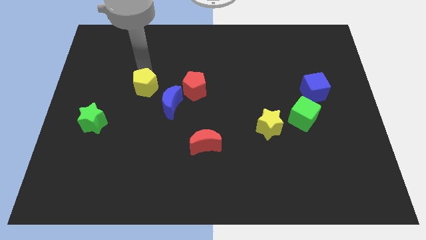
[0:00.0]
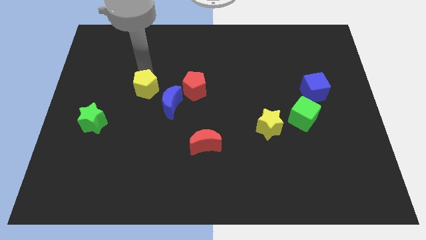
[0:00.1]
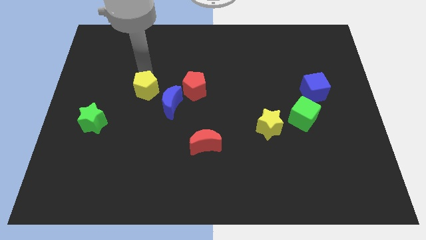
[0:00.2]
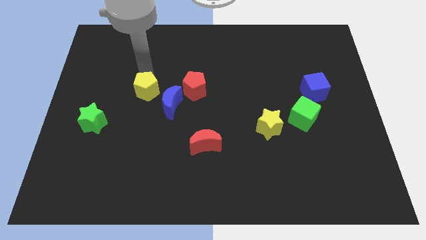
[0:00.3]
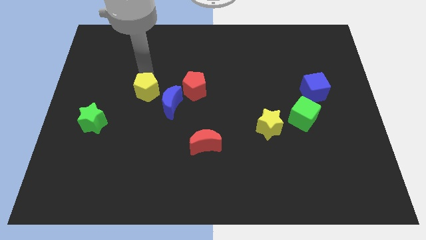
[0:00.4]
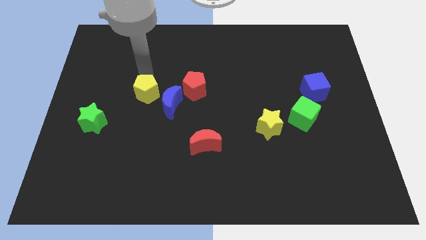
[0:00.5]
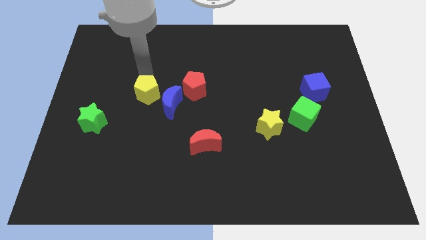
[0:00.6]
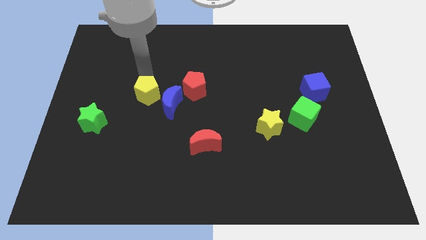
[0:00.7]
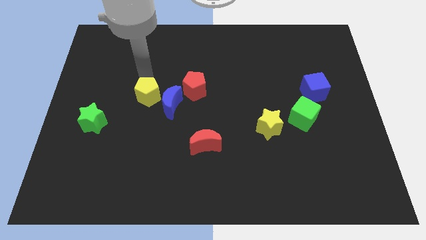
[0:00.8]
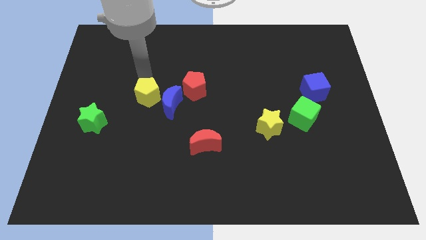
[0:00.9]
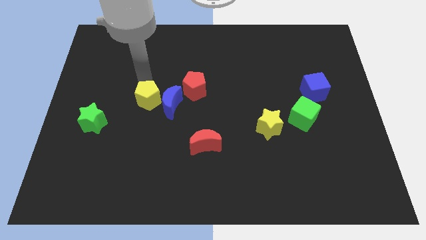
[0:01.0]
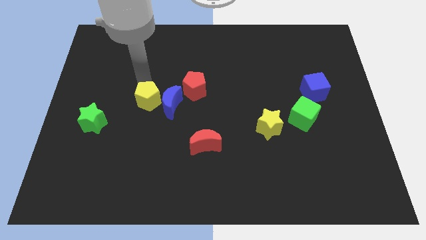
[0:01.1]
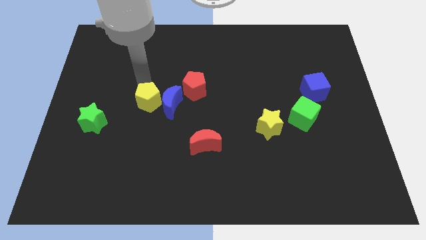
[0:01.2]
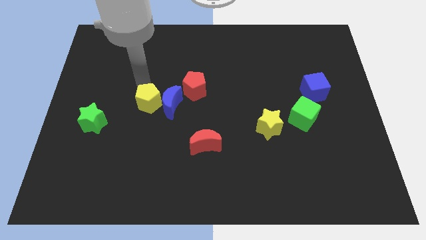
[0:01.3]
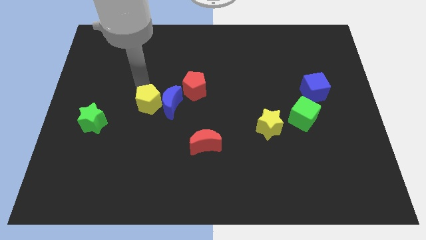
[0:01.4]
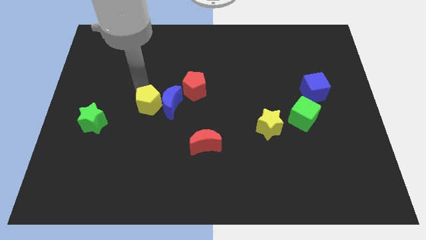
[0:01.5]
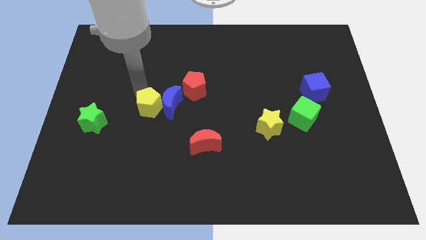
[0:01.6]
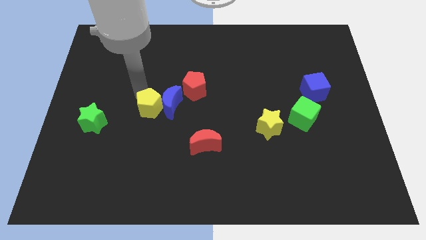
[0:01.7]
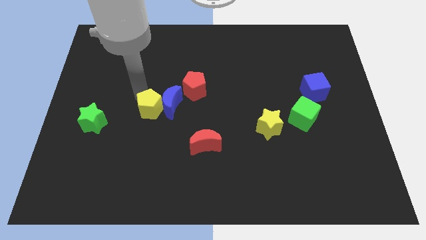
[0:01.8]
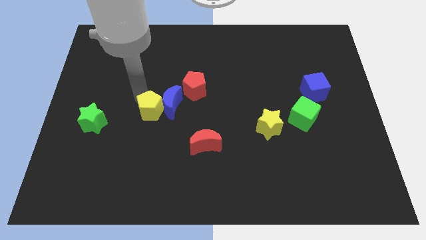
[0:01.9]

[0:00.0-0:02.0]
move the yellow pentagon into the blue crescent

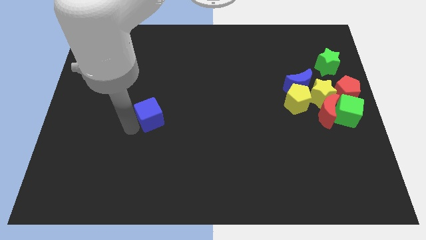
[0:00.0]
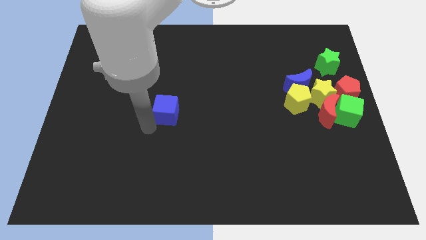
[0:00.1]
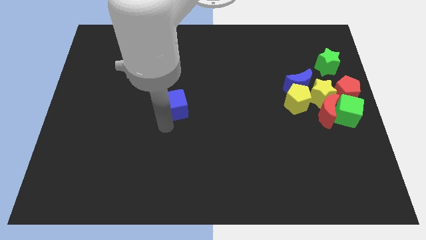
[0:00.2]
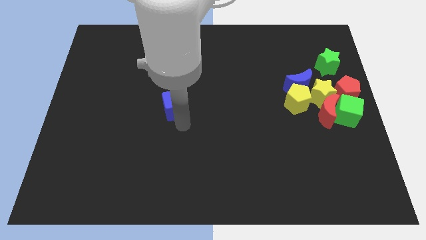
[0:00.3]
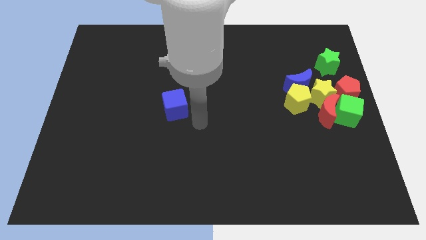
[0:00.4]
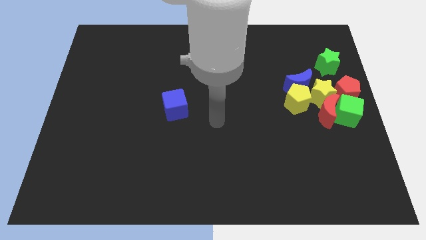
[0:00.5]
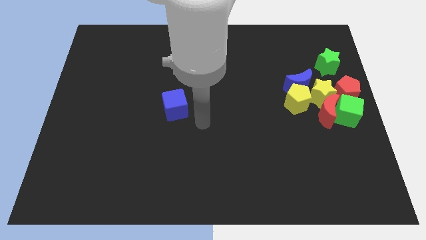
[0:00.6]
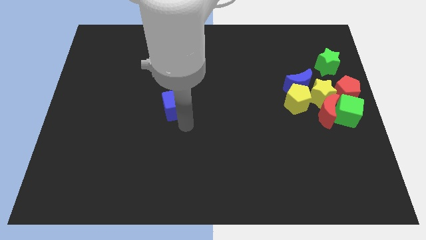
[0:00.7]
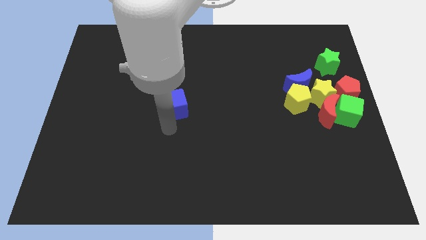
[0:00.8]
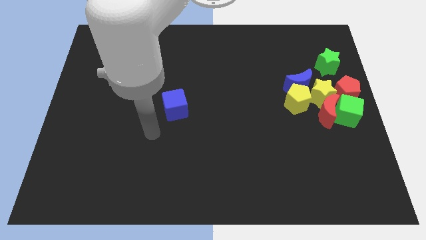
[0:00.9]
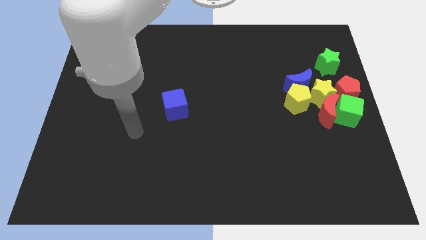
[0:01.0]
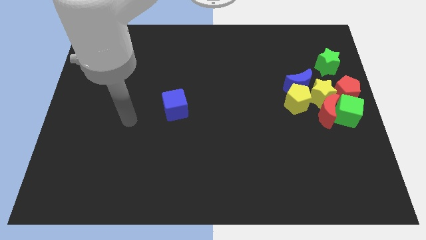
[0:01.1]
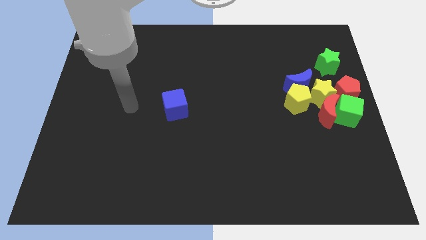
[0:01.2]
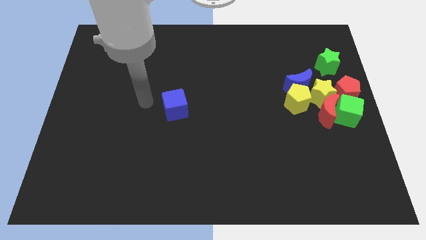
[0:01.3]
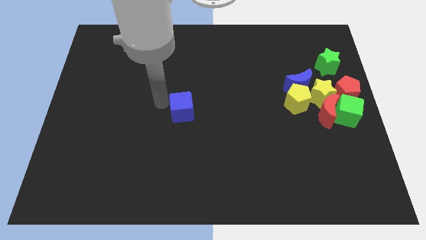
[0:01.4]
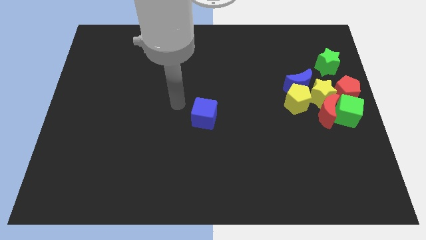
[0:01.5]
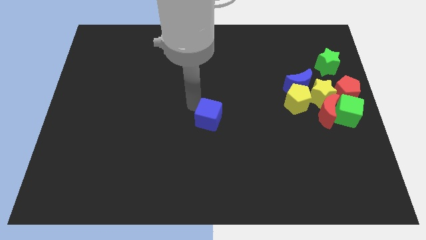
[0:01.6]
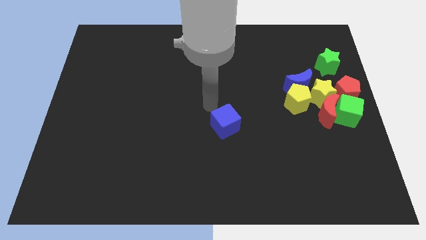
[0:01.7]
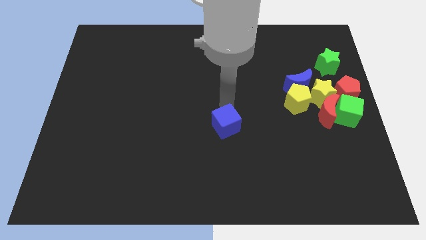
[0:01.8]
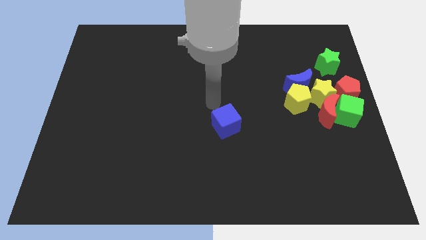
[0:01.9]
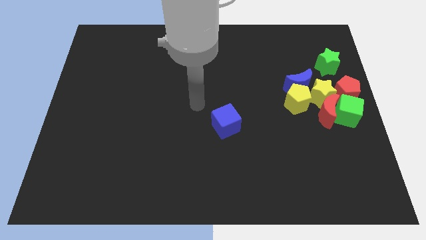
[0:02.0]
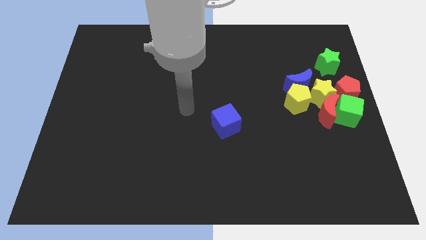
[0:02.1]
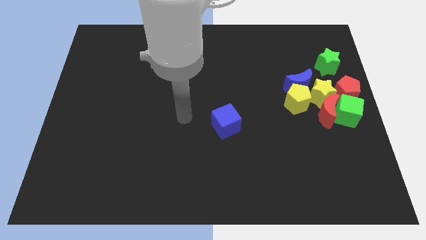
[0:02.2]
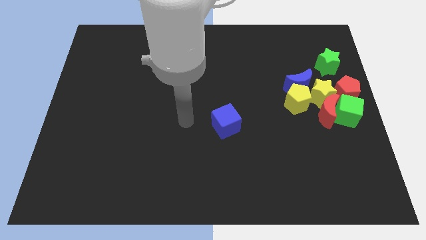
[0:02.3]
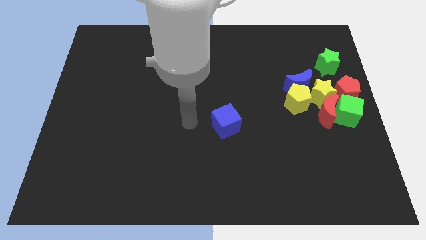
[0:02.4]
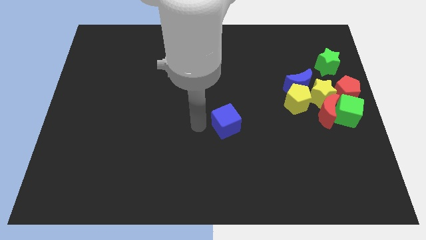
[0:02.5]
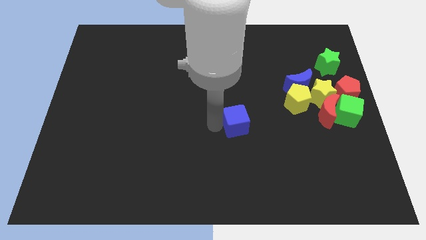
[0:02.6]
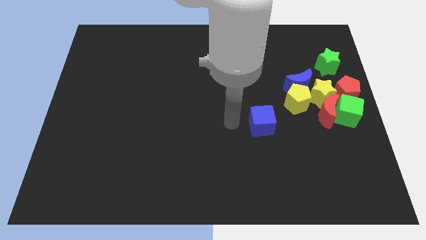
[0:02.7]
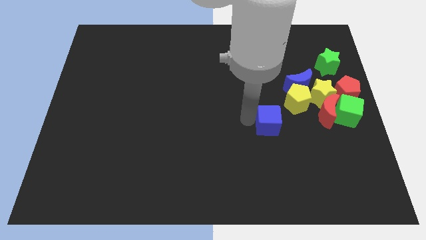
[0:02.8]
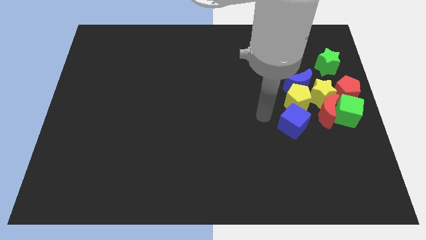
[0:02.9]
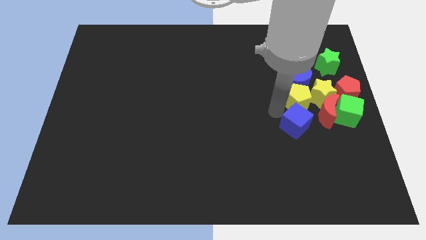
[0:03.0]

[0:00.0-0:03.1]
place the blue cube below the yellow pentagon

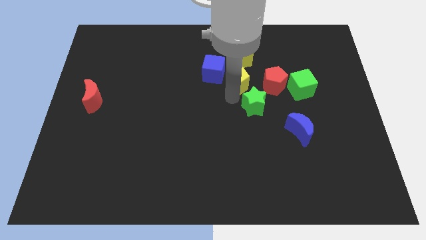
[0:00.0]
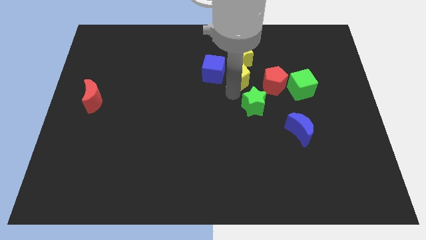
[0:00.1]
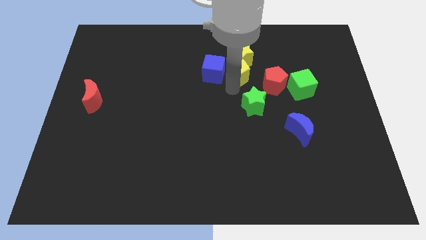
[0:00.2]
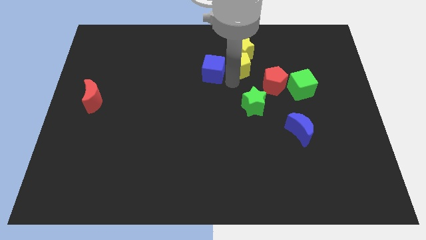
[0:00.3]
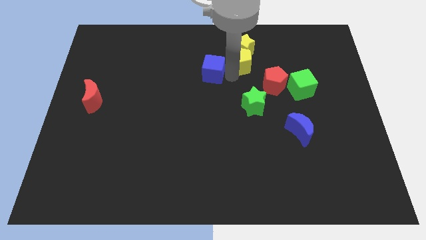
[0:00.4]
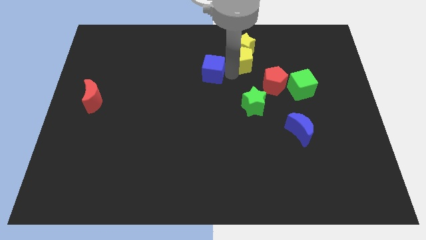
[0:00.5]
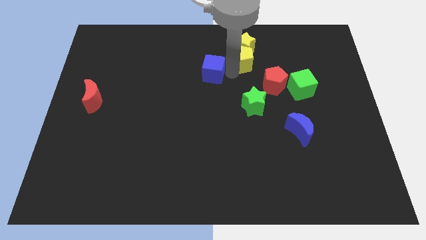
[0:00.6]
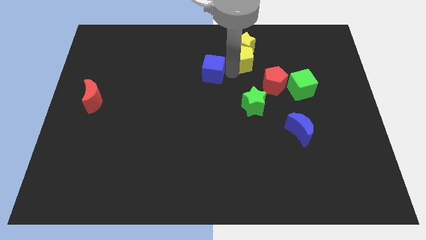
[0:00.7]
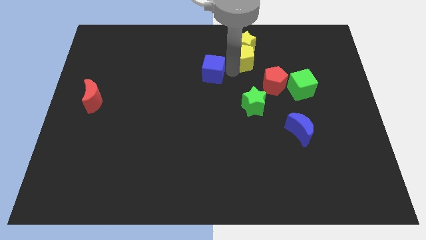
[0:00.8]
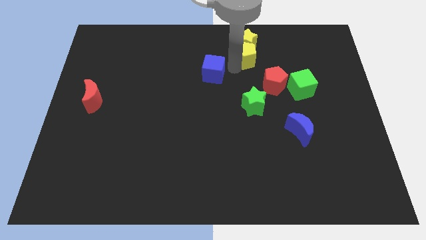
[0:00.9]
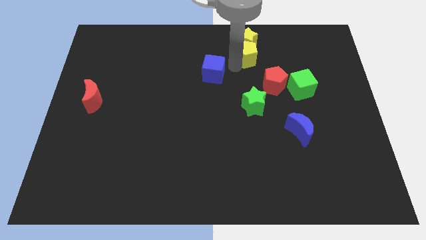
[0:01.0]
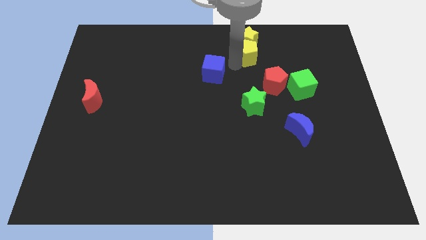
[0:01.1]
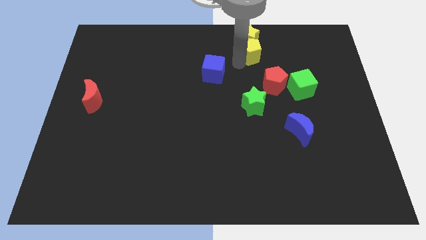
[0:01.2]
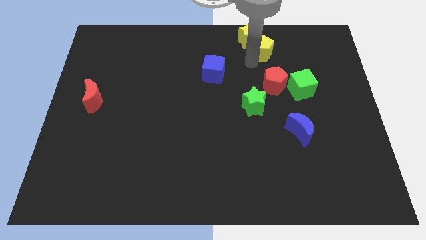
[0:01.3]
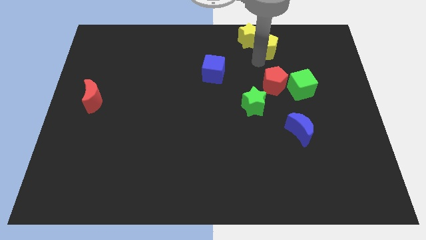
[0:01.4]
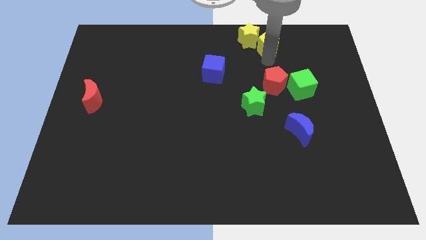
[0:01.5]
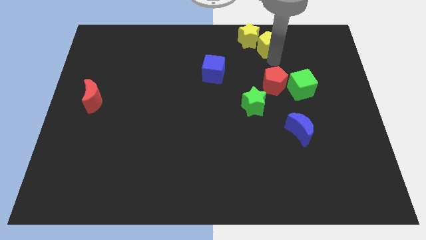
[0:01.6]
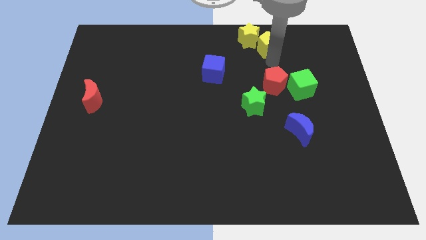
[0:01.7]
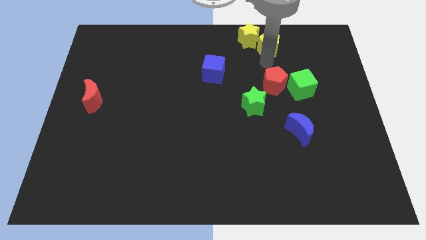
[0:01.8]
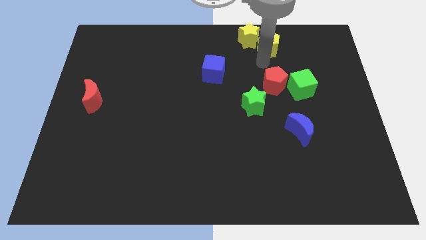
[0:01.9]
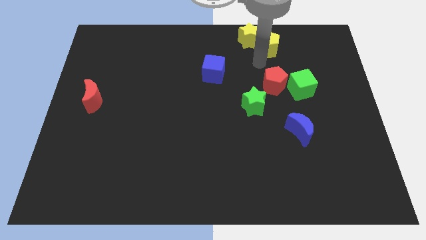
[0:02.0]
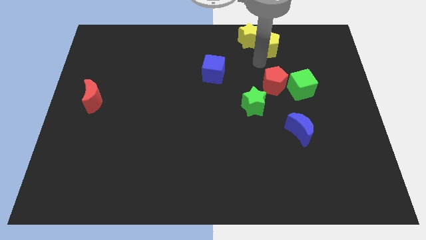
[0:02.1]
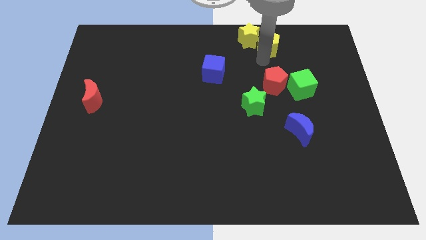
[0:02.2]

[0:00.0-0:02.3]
push the yellow star vertically above green star

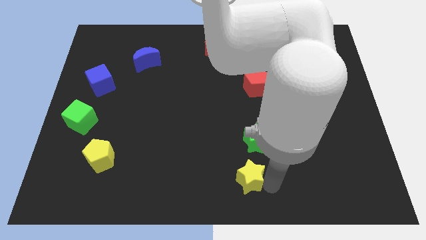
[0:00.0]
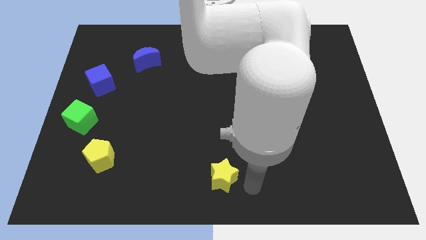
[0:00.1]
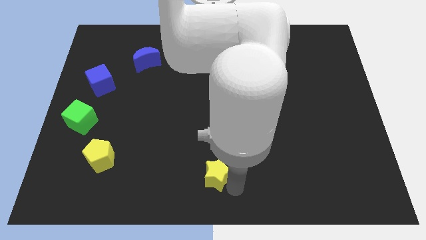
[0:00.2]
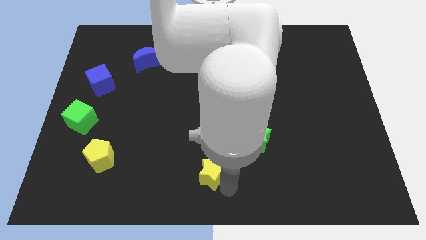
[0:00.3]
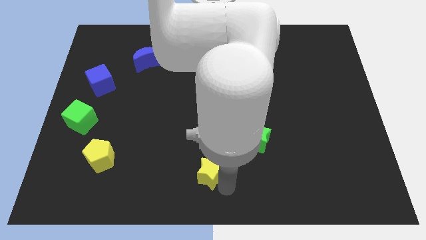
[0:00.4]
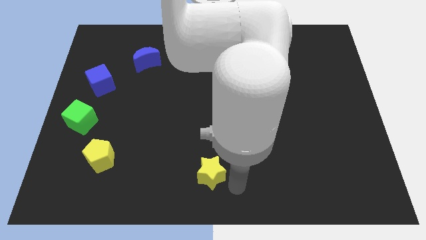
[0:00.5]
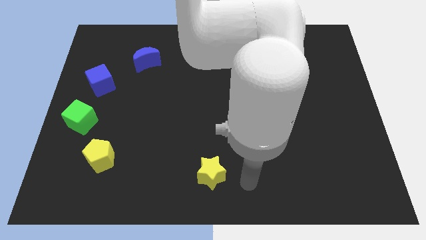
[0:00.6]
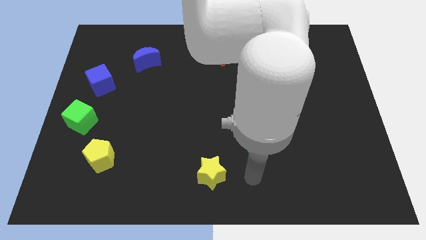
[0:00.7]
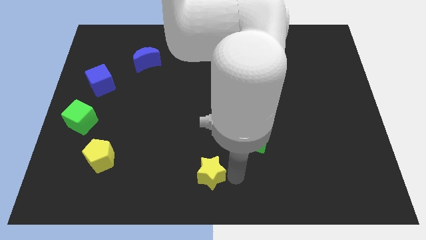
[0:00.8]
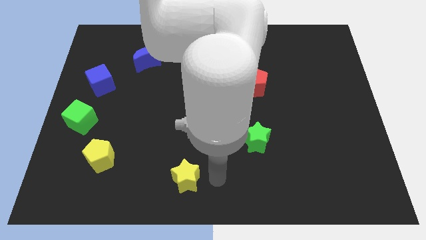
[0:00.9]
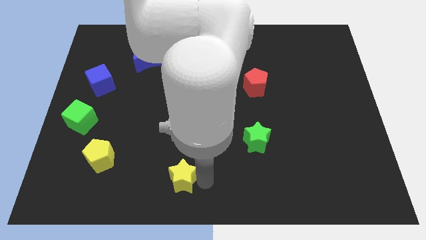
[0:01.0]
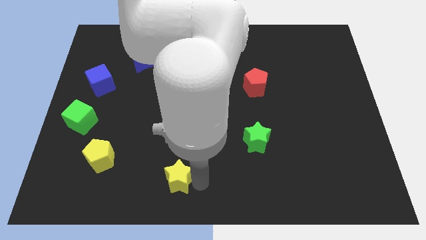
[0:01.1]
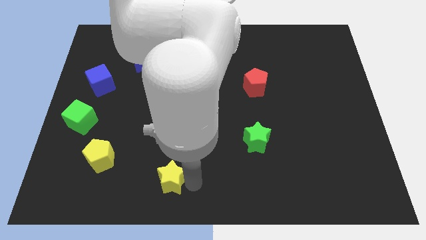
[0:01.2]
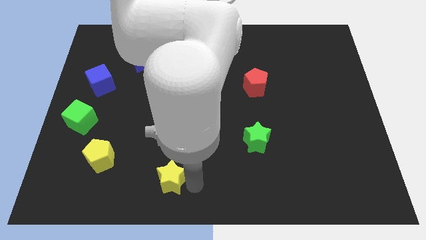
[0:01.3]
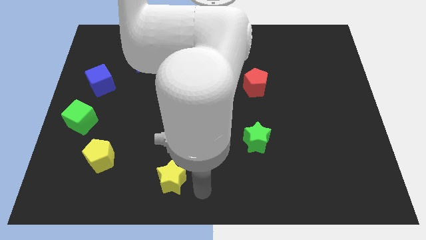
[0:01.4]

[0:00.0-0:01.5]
move the yellow star slightly to the bottom center of the board
